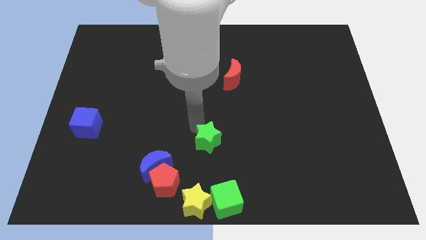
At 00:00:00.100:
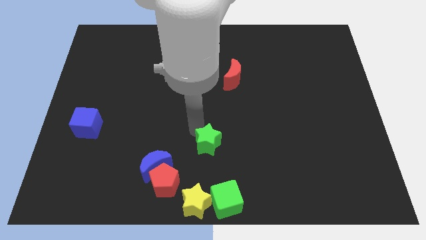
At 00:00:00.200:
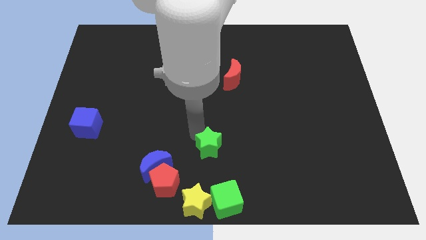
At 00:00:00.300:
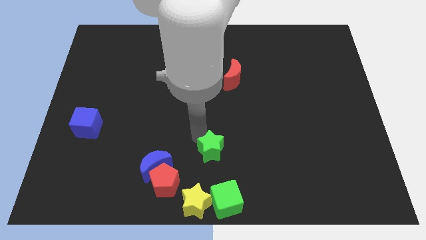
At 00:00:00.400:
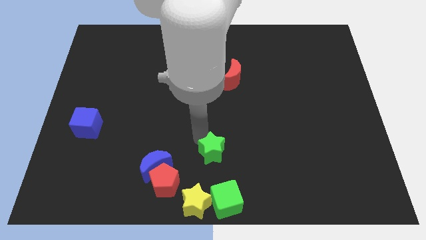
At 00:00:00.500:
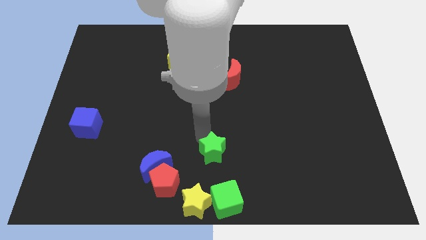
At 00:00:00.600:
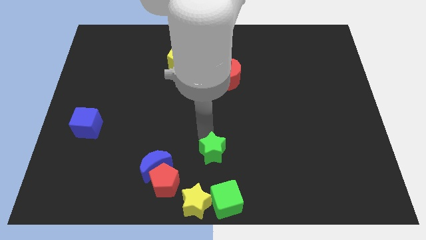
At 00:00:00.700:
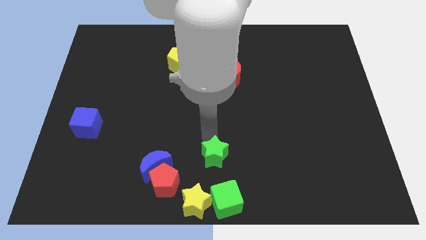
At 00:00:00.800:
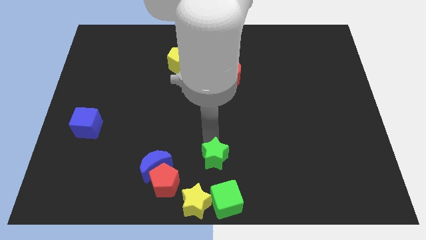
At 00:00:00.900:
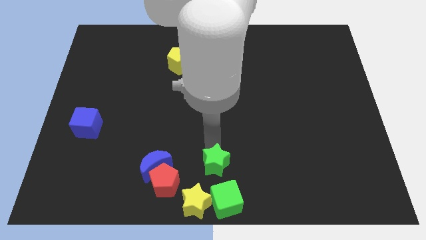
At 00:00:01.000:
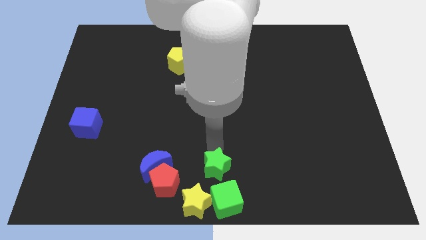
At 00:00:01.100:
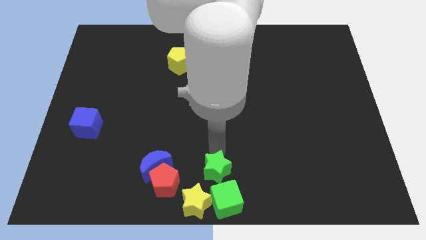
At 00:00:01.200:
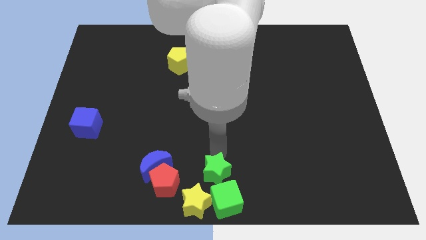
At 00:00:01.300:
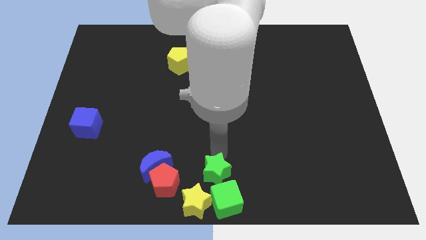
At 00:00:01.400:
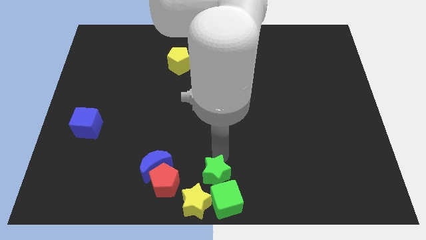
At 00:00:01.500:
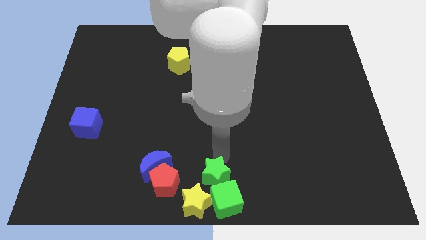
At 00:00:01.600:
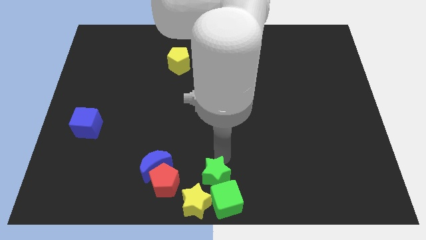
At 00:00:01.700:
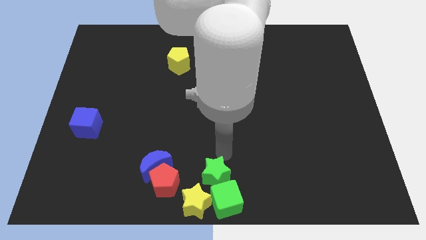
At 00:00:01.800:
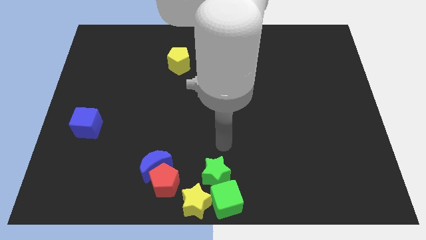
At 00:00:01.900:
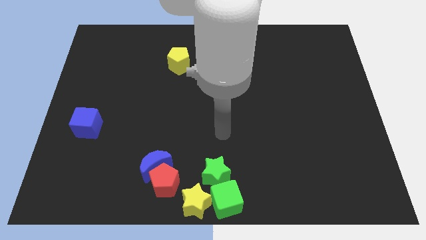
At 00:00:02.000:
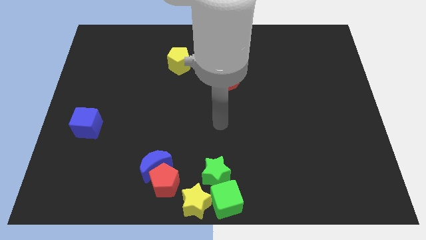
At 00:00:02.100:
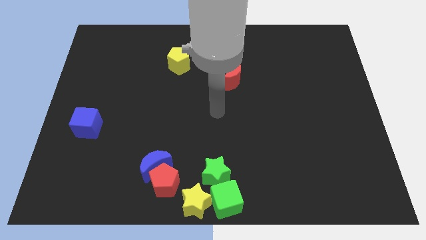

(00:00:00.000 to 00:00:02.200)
push green star into green cube

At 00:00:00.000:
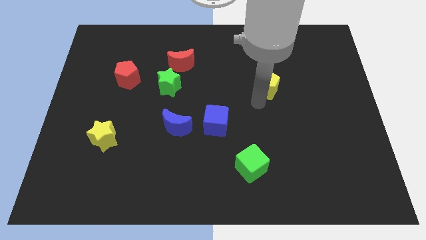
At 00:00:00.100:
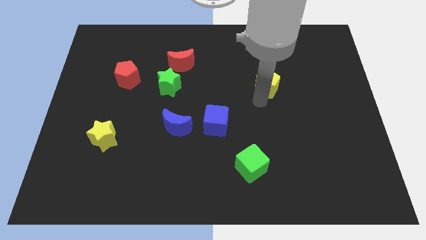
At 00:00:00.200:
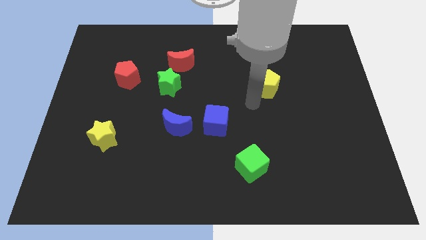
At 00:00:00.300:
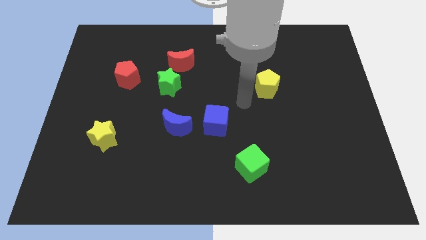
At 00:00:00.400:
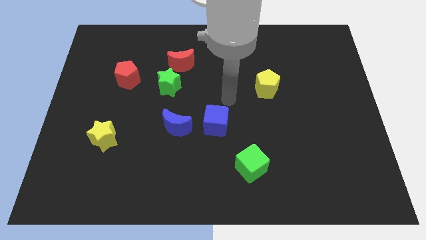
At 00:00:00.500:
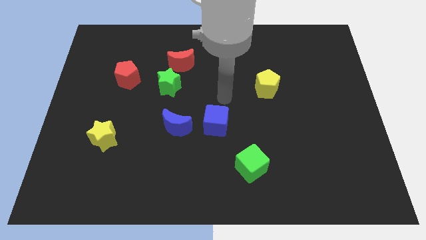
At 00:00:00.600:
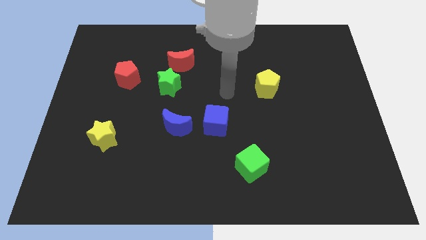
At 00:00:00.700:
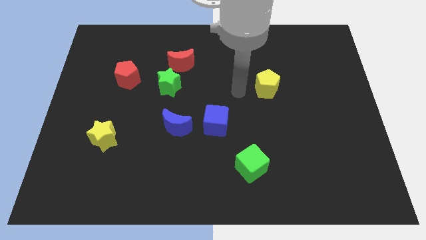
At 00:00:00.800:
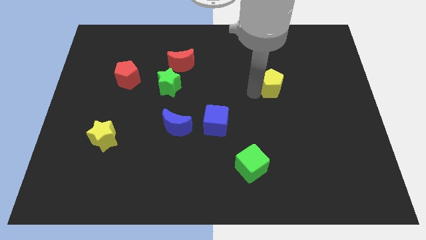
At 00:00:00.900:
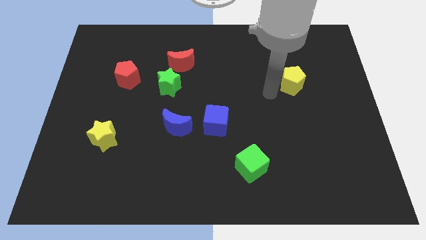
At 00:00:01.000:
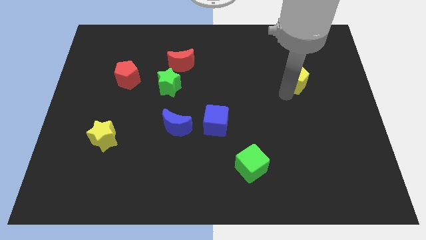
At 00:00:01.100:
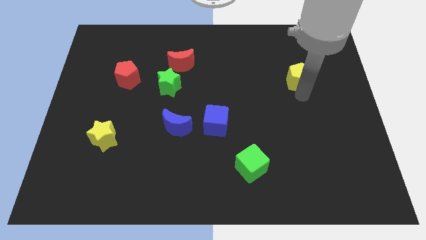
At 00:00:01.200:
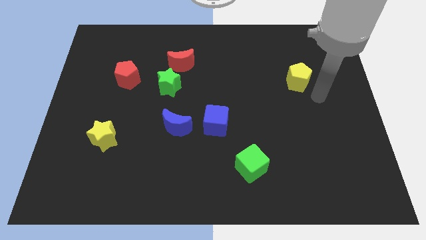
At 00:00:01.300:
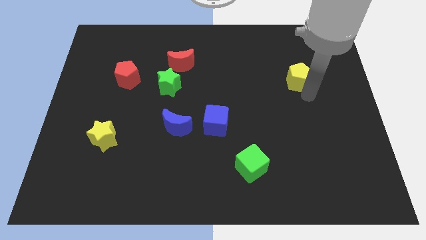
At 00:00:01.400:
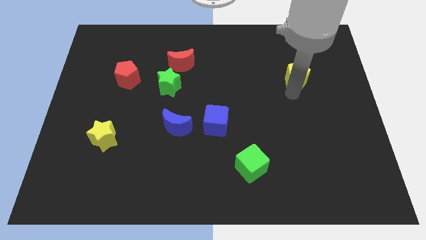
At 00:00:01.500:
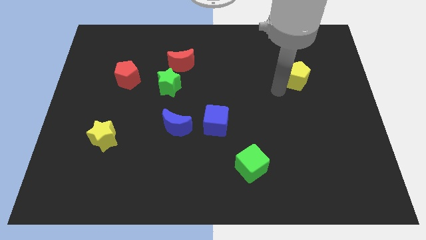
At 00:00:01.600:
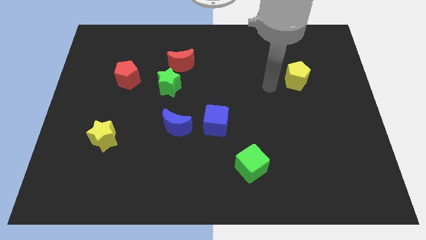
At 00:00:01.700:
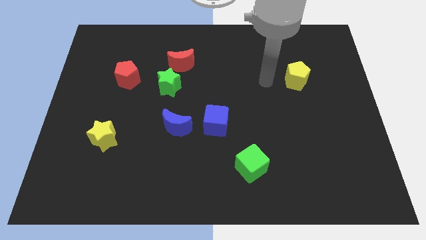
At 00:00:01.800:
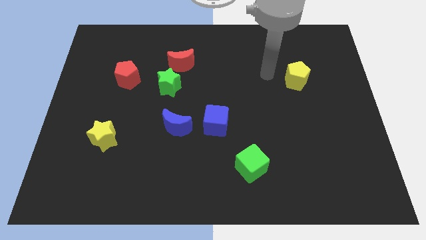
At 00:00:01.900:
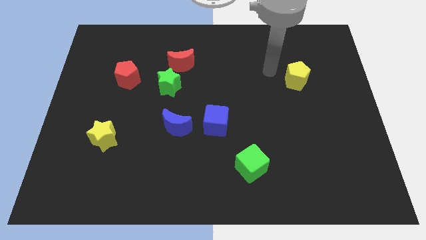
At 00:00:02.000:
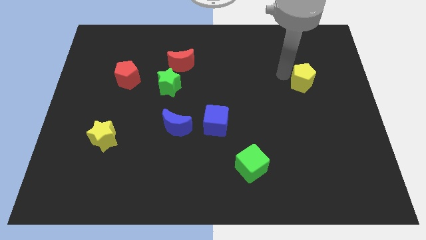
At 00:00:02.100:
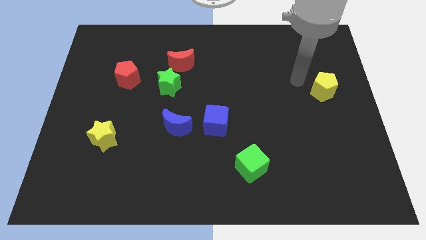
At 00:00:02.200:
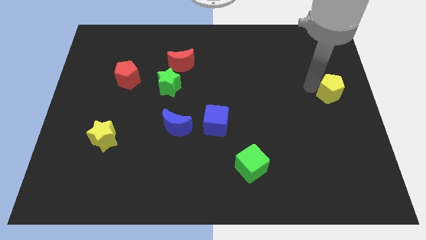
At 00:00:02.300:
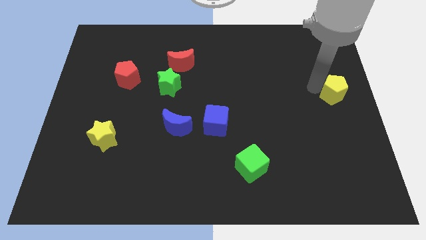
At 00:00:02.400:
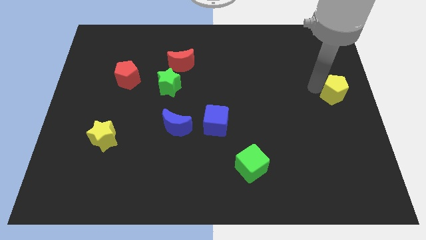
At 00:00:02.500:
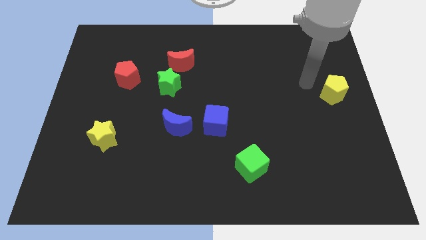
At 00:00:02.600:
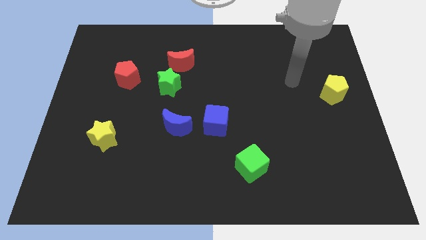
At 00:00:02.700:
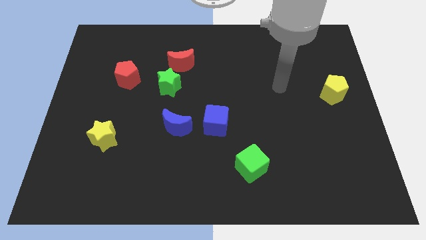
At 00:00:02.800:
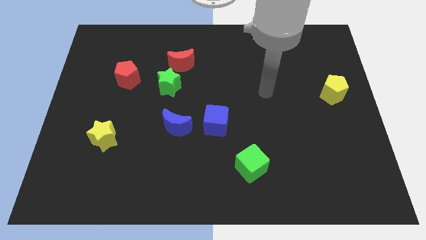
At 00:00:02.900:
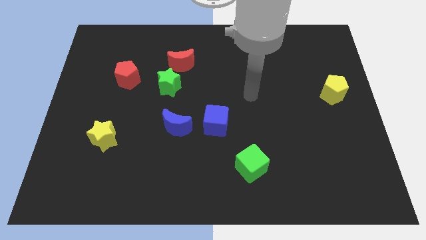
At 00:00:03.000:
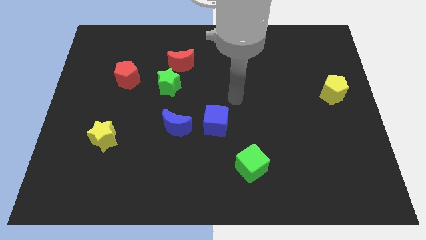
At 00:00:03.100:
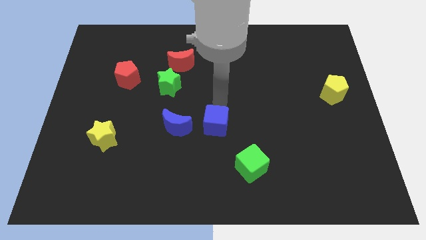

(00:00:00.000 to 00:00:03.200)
place yellow pentagon to the right center

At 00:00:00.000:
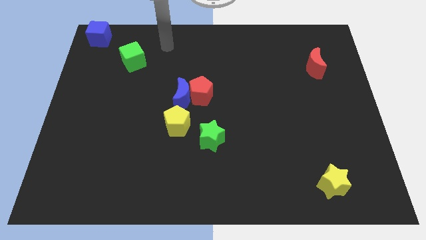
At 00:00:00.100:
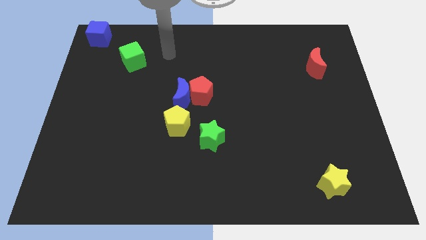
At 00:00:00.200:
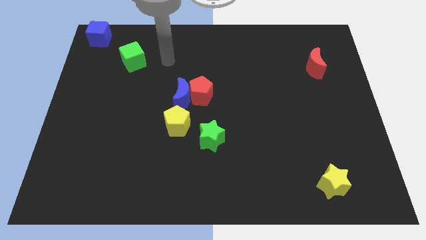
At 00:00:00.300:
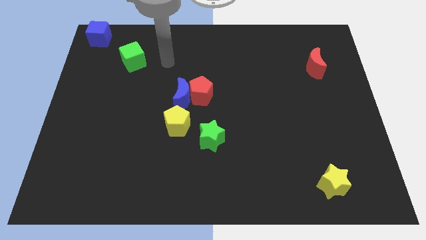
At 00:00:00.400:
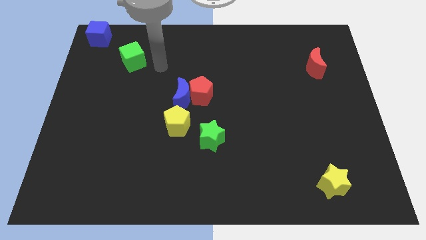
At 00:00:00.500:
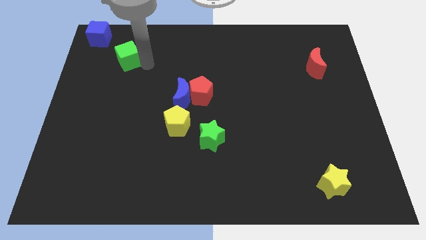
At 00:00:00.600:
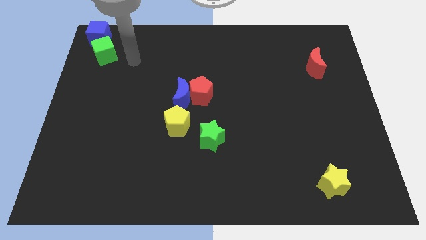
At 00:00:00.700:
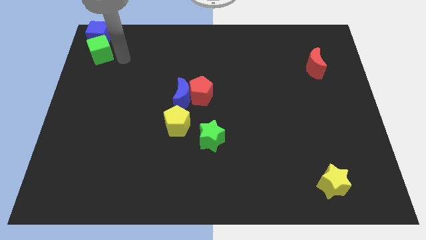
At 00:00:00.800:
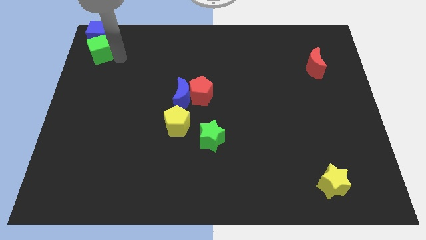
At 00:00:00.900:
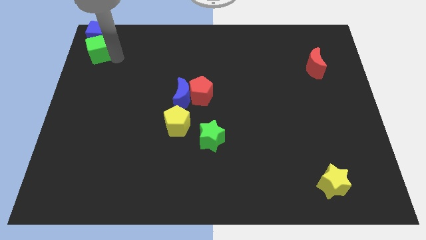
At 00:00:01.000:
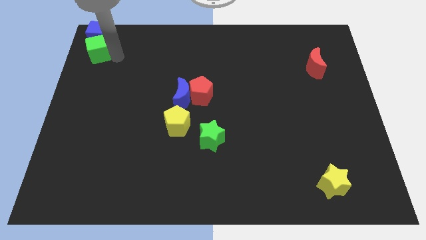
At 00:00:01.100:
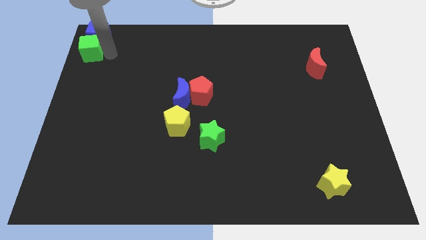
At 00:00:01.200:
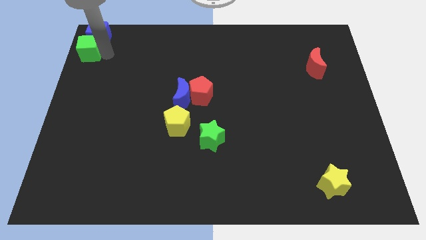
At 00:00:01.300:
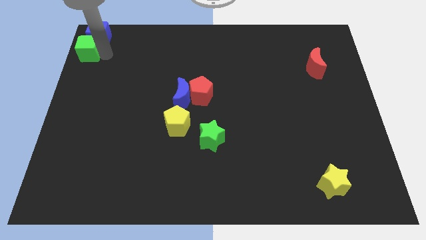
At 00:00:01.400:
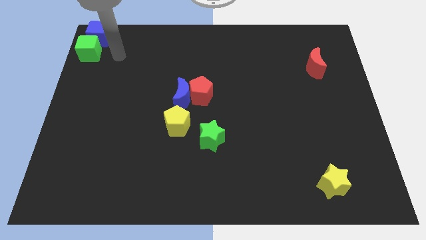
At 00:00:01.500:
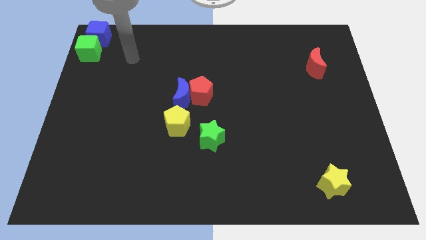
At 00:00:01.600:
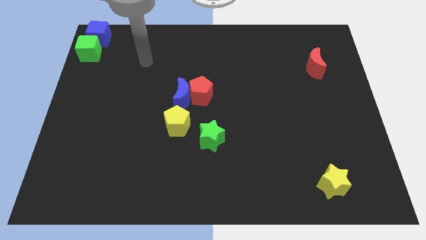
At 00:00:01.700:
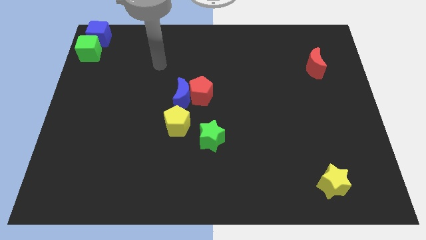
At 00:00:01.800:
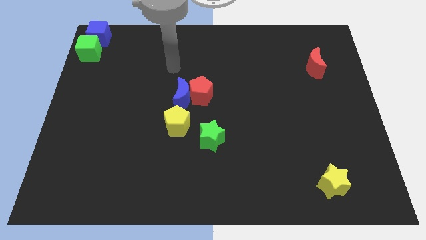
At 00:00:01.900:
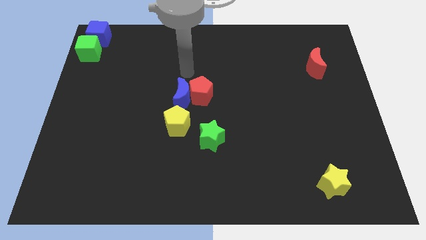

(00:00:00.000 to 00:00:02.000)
place the green cube below the blue cube

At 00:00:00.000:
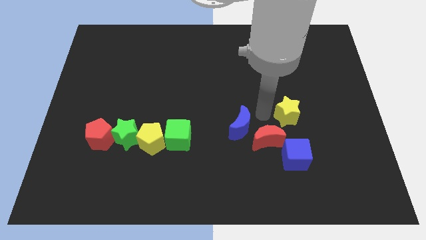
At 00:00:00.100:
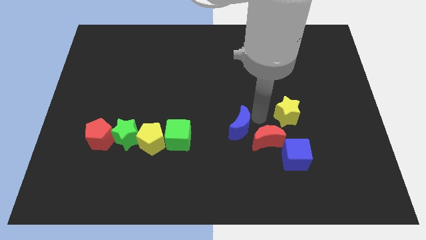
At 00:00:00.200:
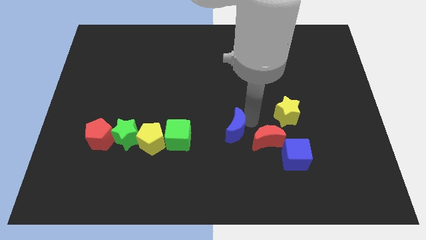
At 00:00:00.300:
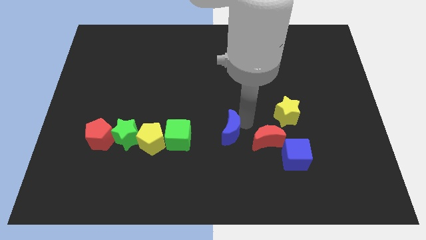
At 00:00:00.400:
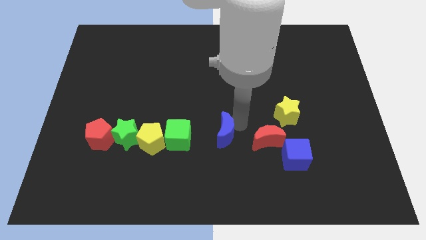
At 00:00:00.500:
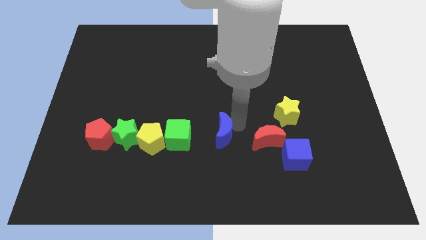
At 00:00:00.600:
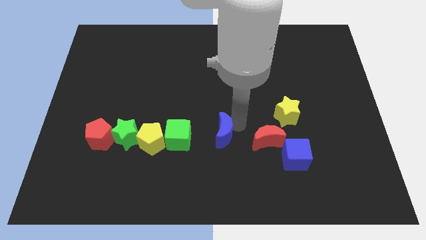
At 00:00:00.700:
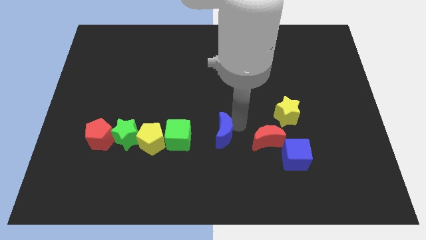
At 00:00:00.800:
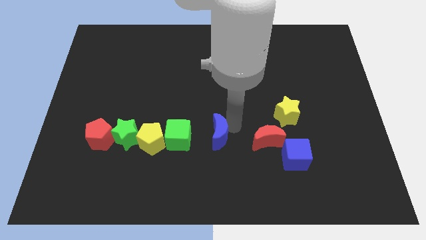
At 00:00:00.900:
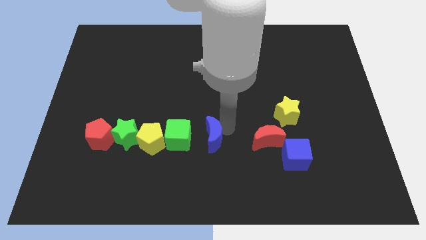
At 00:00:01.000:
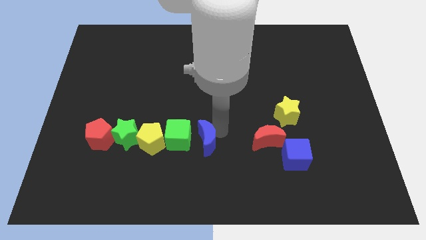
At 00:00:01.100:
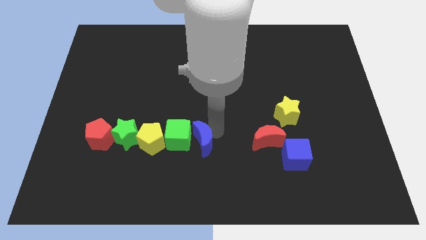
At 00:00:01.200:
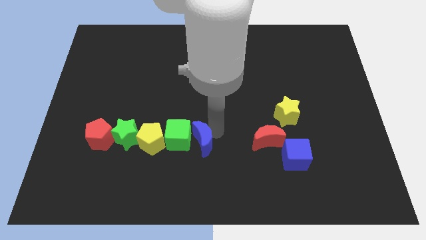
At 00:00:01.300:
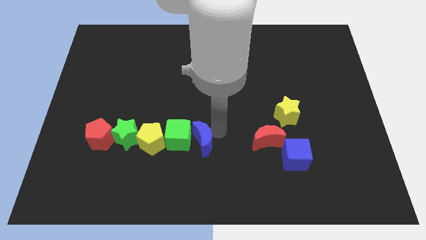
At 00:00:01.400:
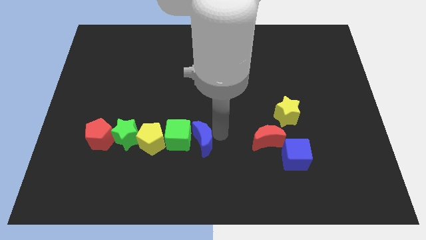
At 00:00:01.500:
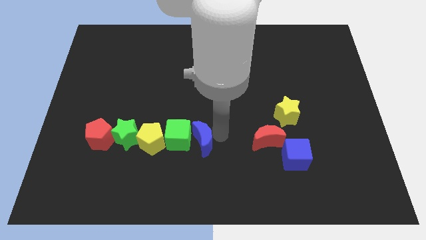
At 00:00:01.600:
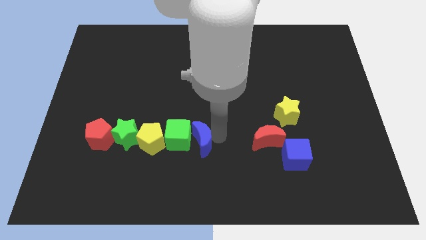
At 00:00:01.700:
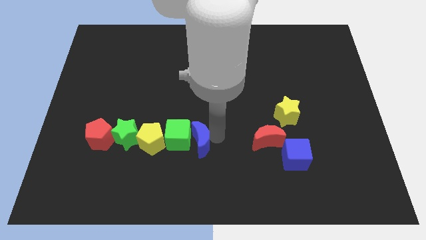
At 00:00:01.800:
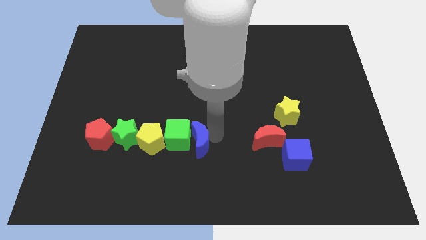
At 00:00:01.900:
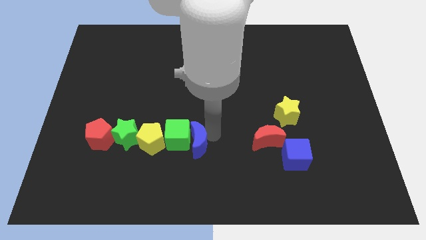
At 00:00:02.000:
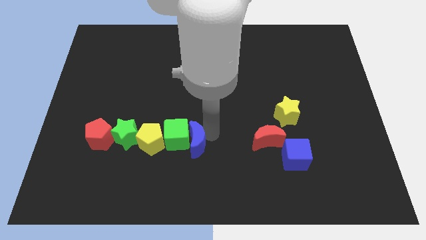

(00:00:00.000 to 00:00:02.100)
put the blue moon into the green cube
